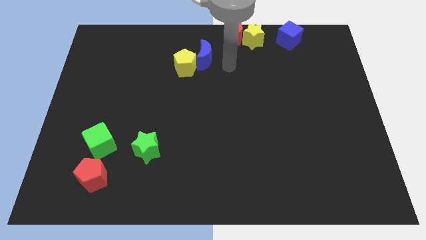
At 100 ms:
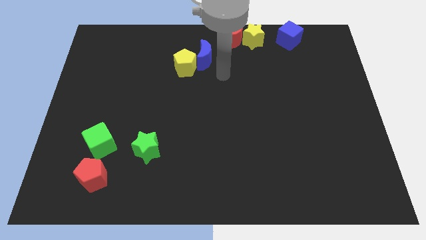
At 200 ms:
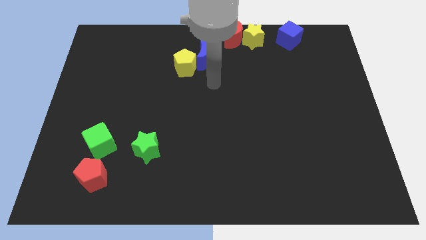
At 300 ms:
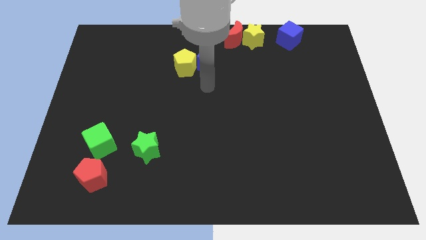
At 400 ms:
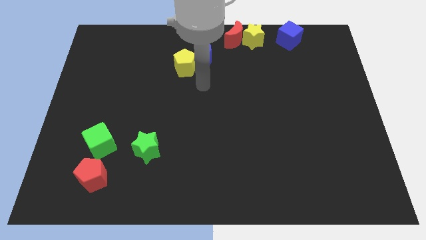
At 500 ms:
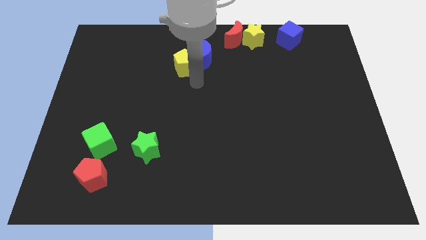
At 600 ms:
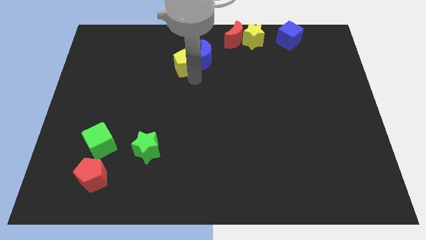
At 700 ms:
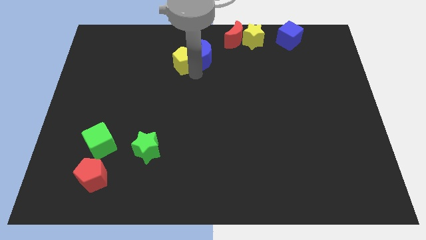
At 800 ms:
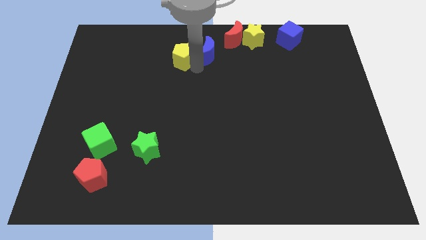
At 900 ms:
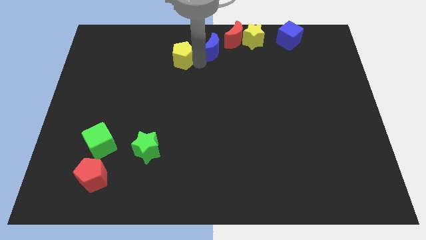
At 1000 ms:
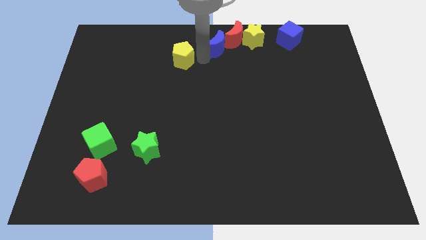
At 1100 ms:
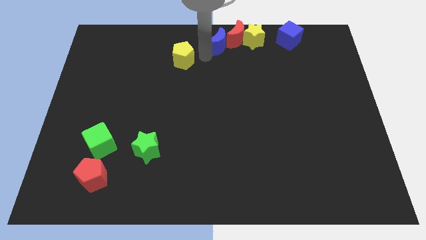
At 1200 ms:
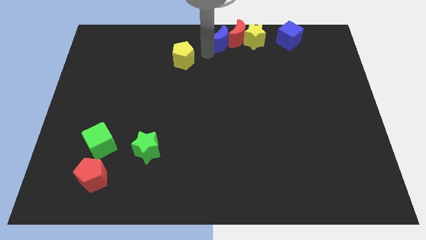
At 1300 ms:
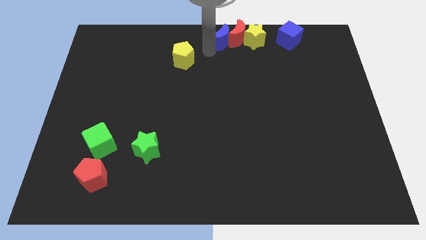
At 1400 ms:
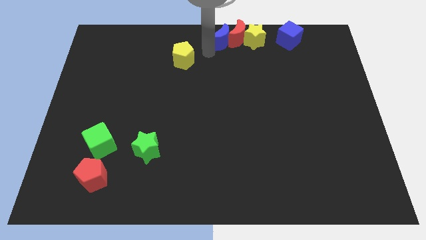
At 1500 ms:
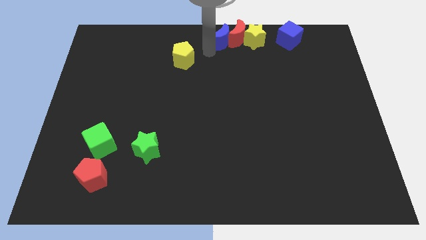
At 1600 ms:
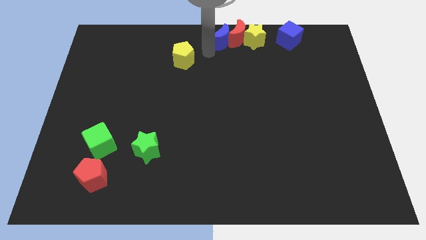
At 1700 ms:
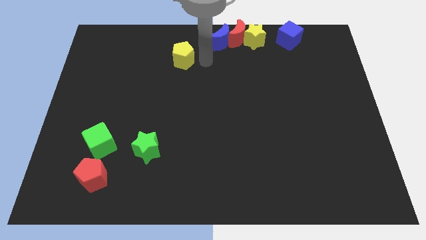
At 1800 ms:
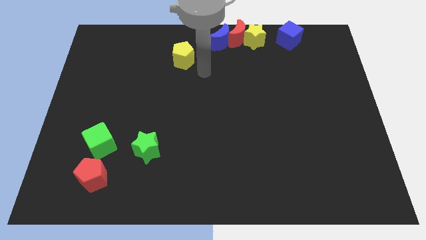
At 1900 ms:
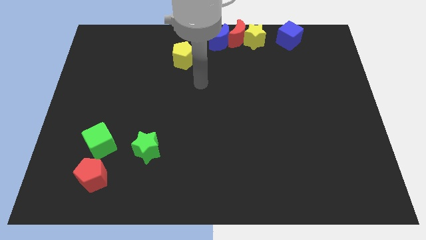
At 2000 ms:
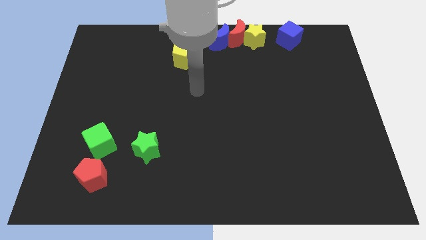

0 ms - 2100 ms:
move the blue moon to left side of the red moon

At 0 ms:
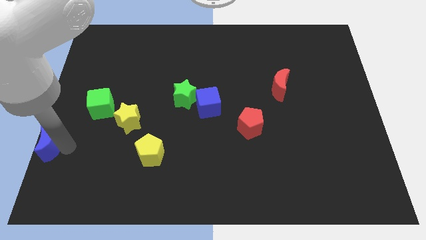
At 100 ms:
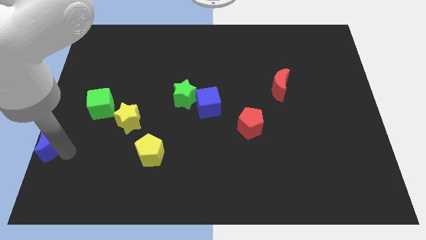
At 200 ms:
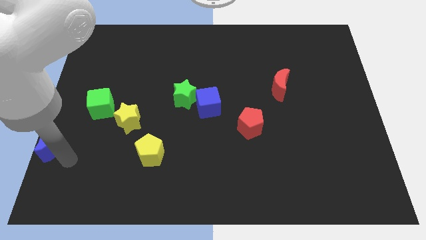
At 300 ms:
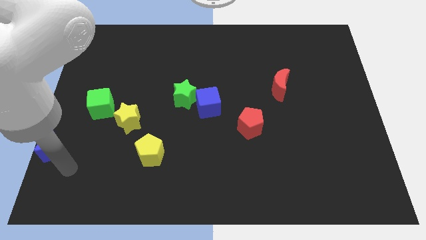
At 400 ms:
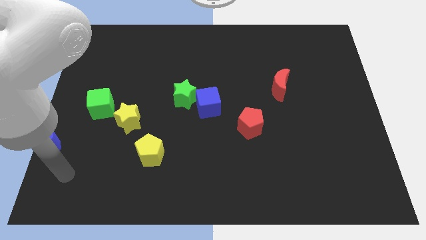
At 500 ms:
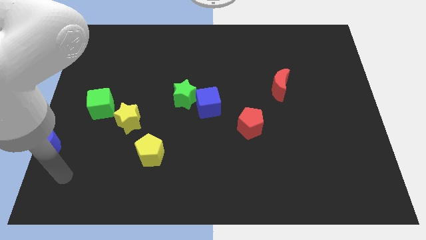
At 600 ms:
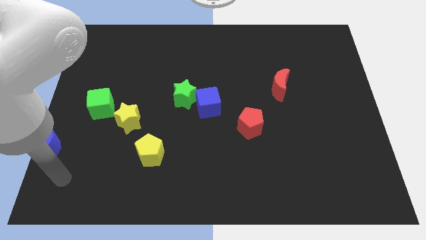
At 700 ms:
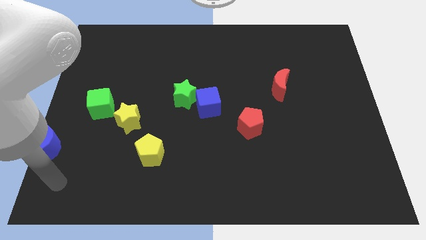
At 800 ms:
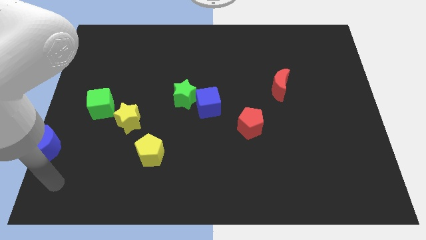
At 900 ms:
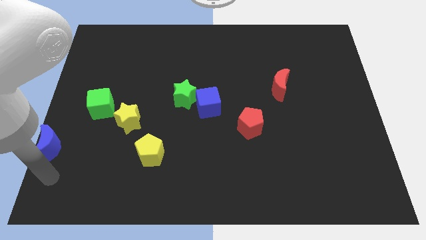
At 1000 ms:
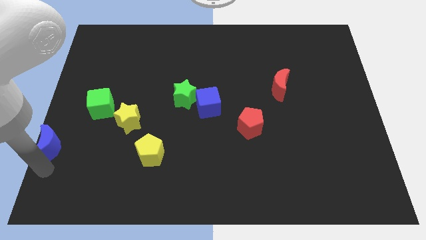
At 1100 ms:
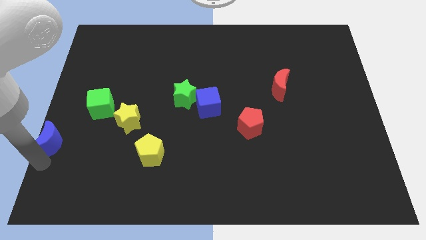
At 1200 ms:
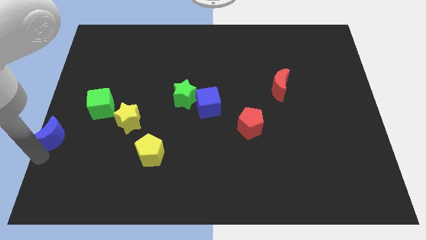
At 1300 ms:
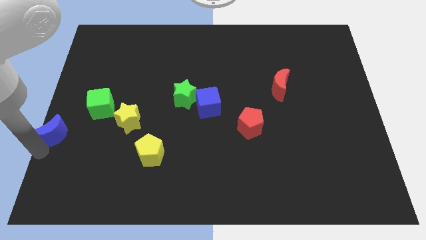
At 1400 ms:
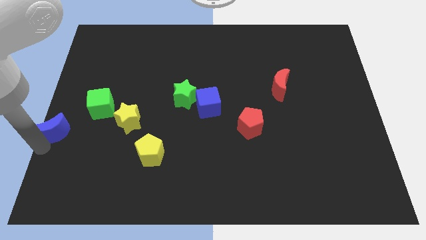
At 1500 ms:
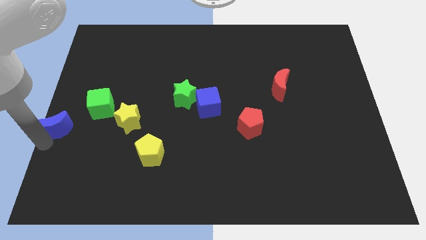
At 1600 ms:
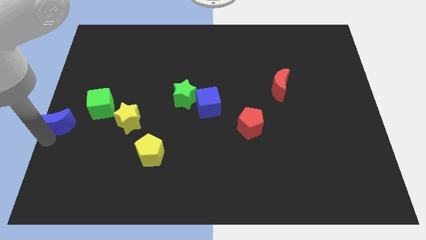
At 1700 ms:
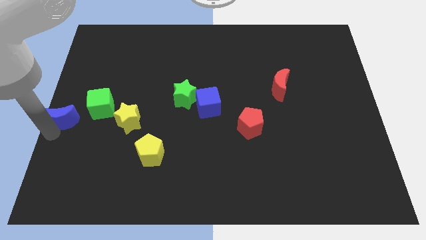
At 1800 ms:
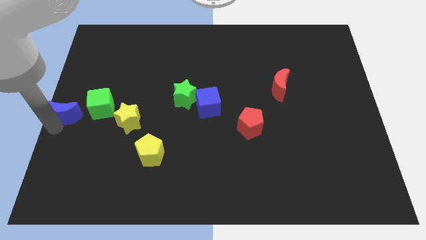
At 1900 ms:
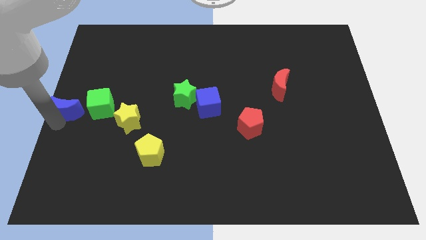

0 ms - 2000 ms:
place the blue crescent at the center left of the board

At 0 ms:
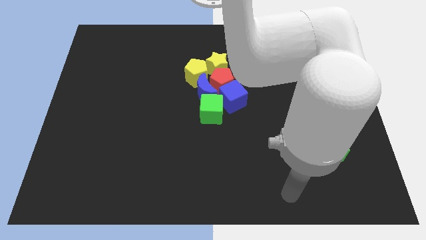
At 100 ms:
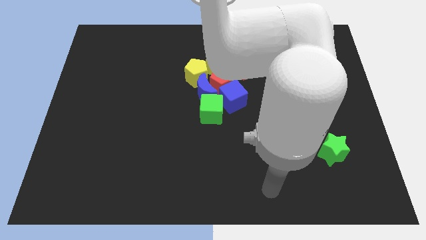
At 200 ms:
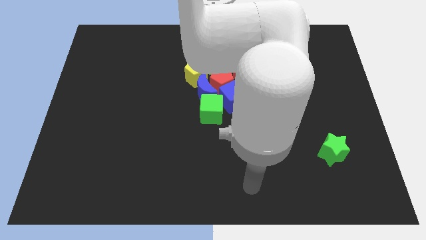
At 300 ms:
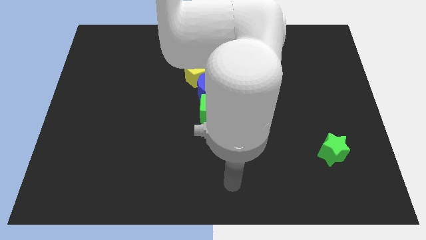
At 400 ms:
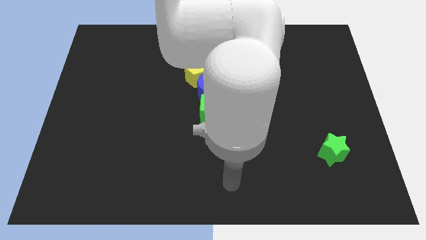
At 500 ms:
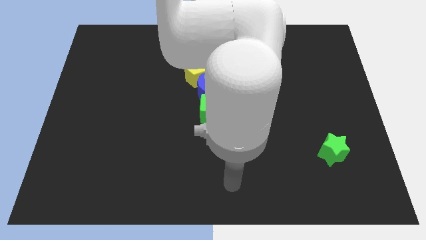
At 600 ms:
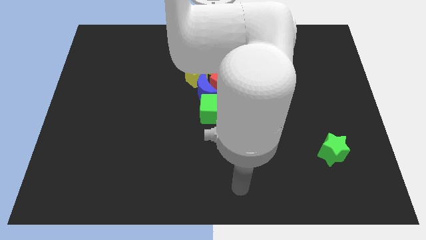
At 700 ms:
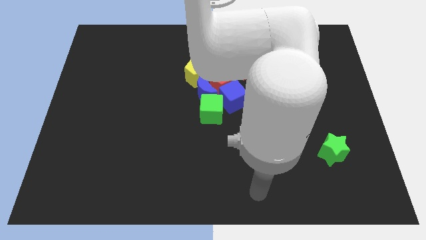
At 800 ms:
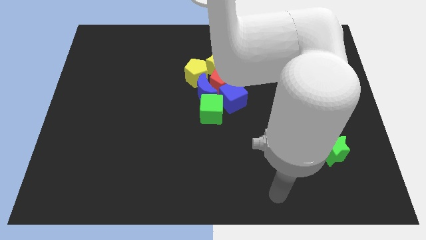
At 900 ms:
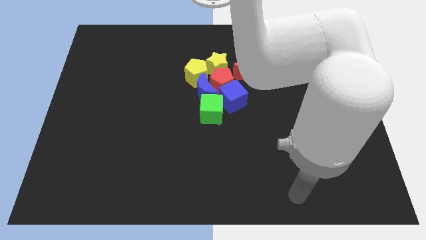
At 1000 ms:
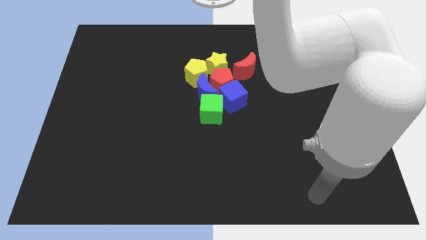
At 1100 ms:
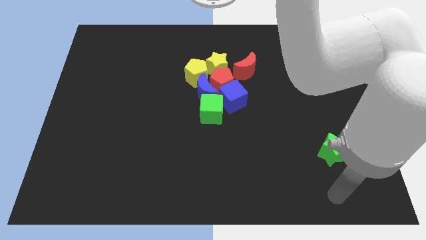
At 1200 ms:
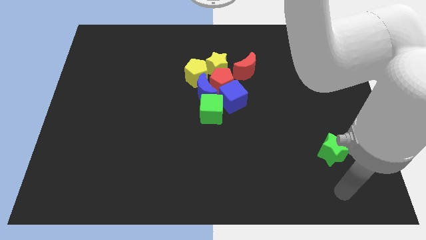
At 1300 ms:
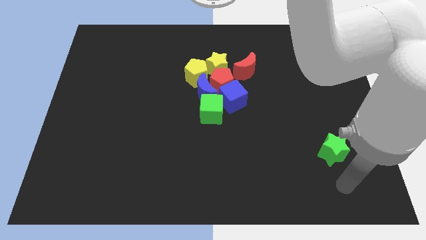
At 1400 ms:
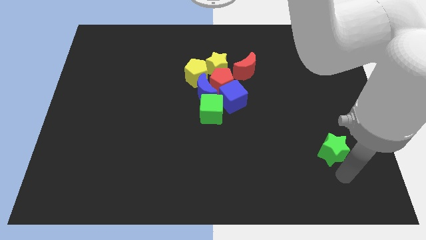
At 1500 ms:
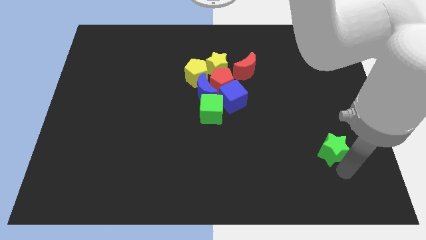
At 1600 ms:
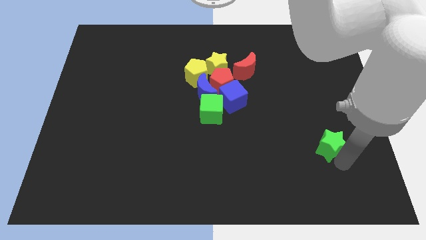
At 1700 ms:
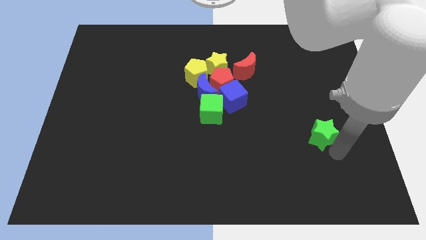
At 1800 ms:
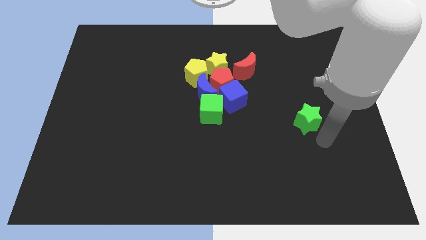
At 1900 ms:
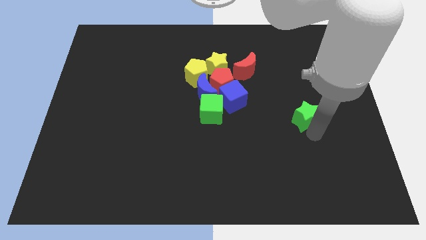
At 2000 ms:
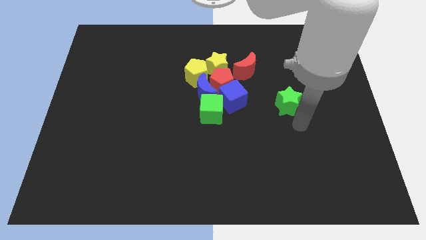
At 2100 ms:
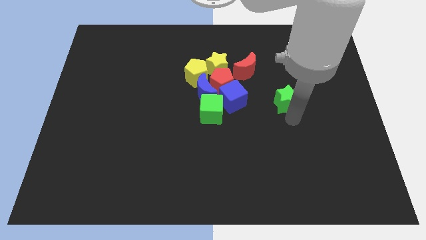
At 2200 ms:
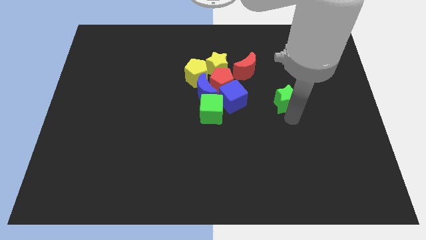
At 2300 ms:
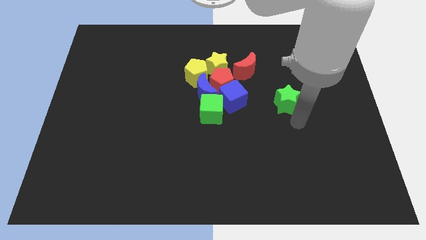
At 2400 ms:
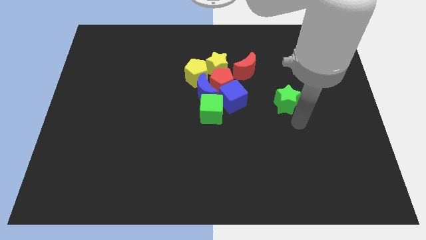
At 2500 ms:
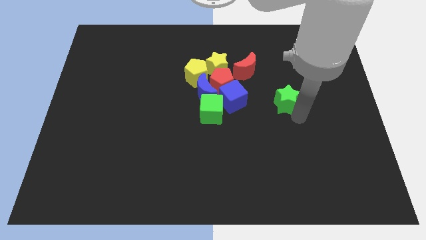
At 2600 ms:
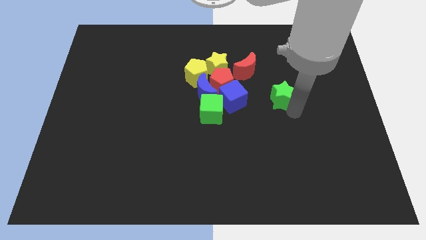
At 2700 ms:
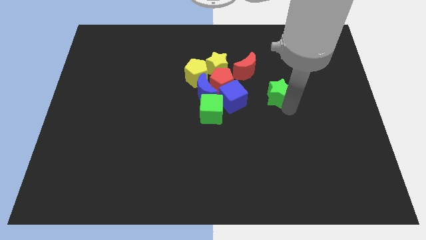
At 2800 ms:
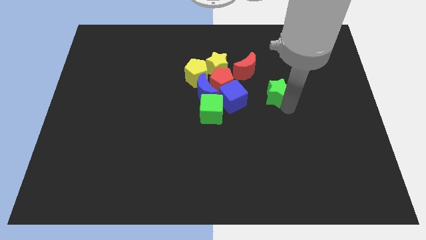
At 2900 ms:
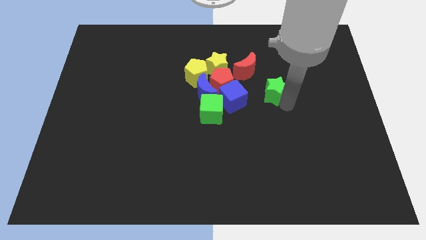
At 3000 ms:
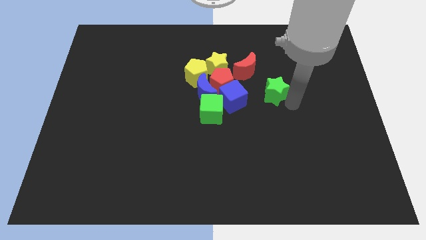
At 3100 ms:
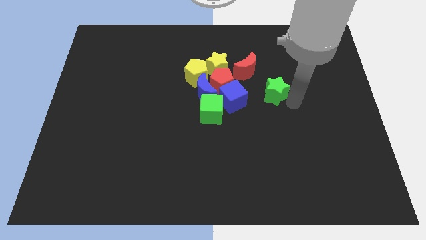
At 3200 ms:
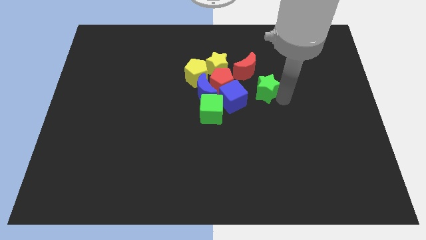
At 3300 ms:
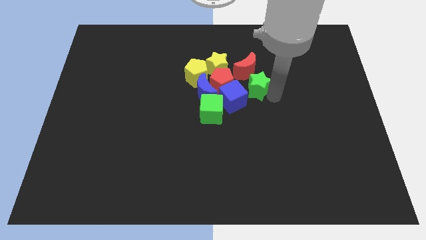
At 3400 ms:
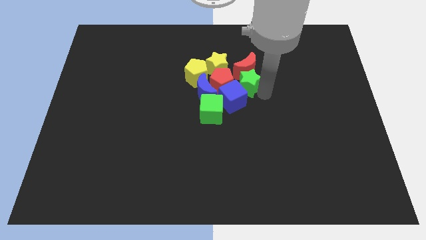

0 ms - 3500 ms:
move the green star below to the red crescent

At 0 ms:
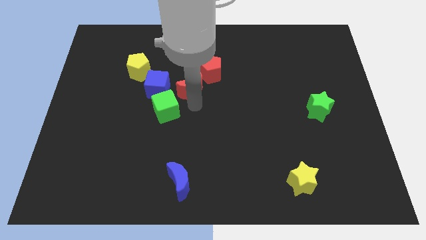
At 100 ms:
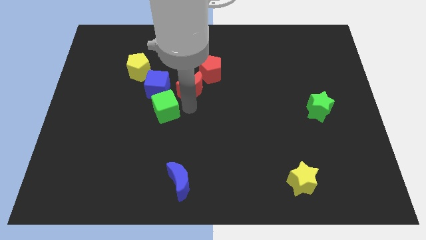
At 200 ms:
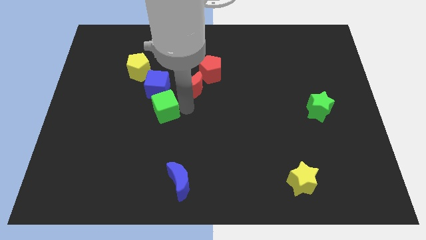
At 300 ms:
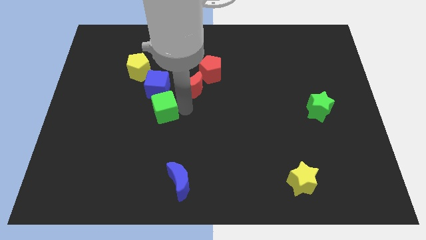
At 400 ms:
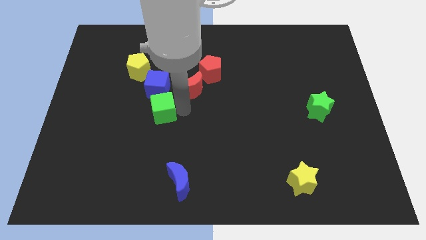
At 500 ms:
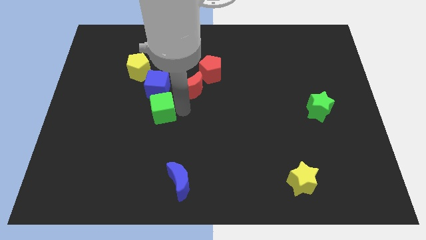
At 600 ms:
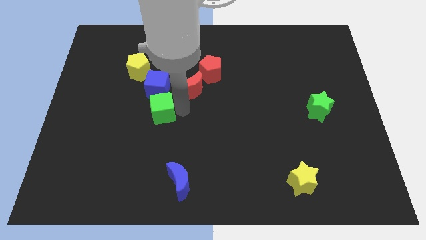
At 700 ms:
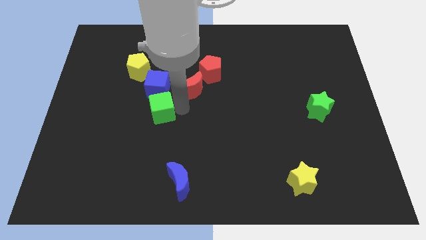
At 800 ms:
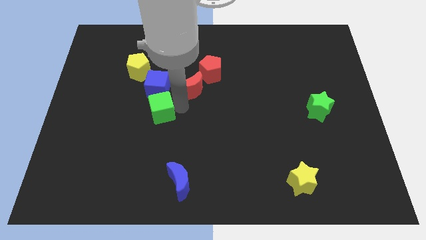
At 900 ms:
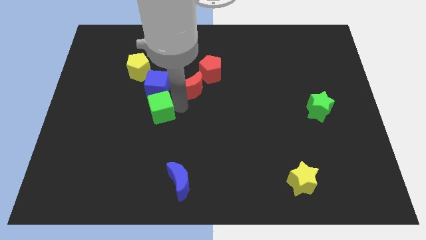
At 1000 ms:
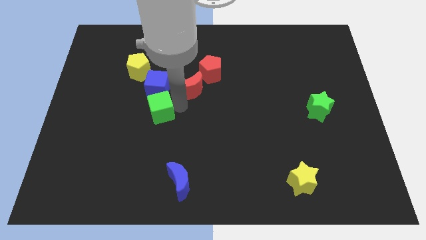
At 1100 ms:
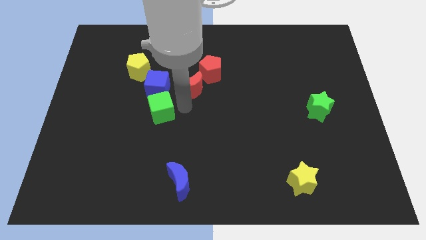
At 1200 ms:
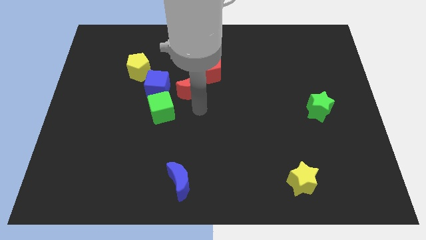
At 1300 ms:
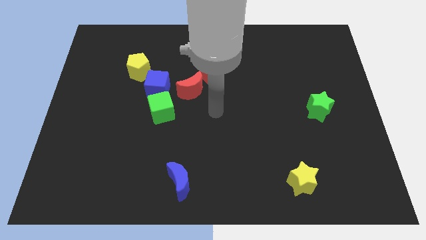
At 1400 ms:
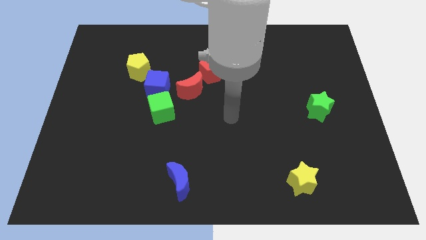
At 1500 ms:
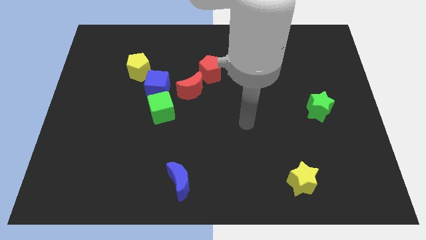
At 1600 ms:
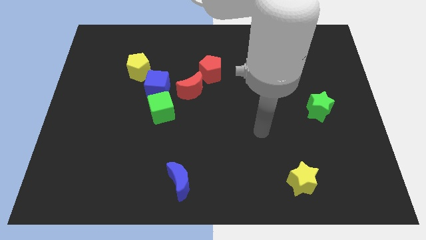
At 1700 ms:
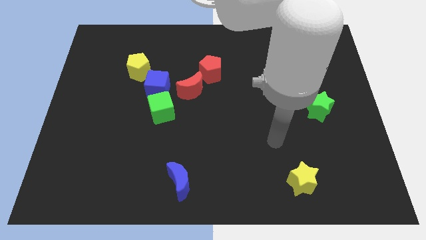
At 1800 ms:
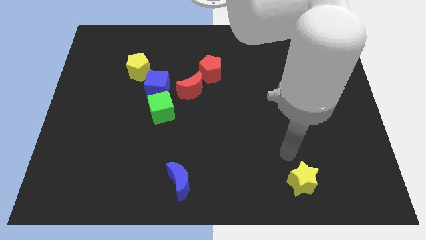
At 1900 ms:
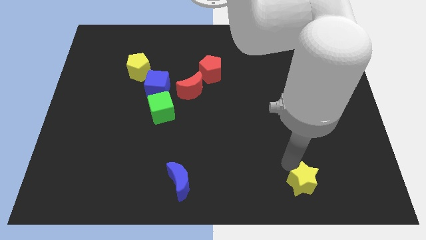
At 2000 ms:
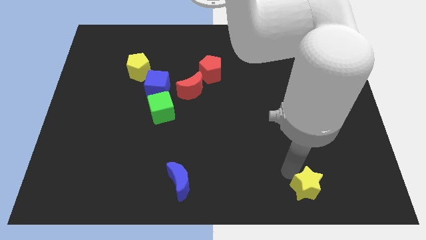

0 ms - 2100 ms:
place the arm at the right of the yellow star
